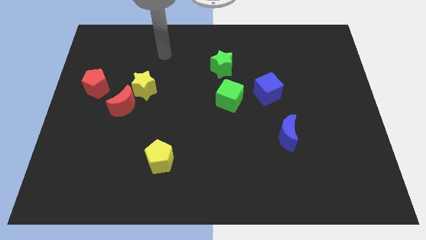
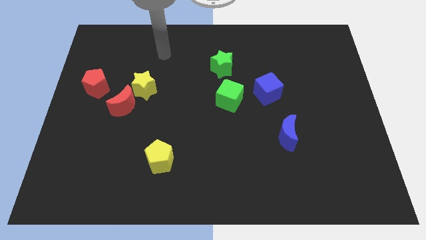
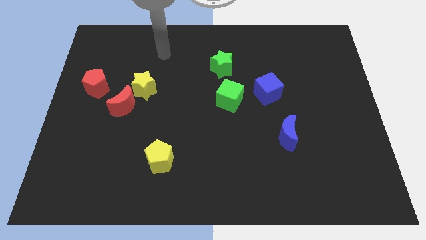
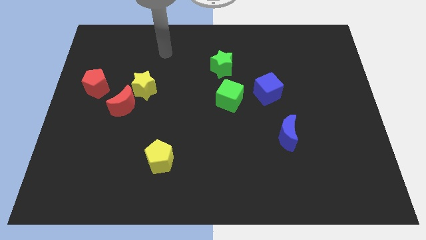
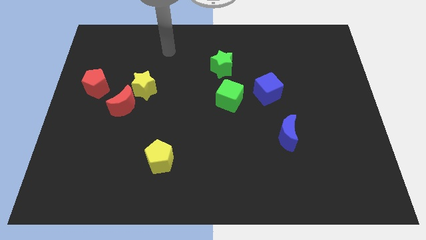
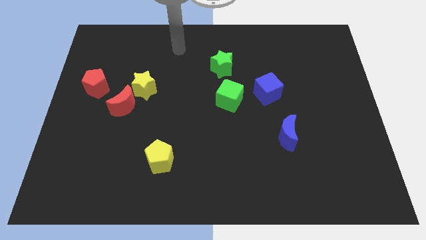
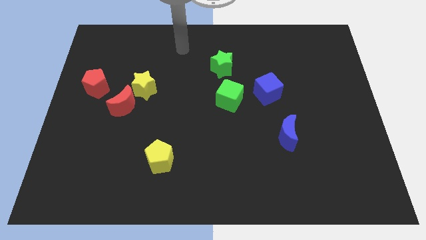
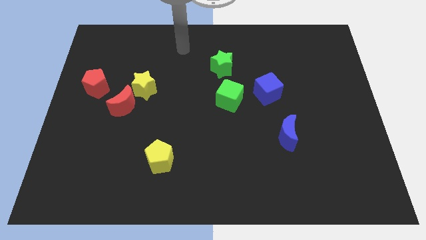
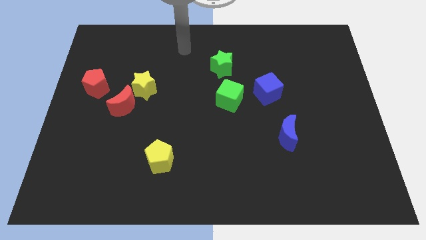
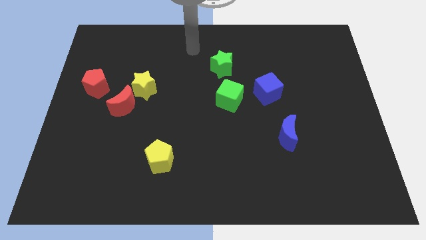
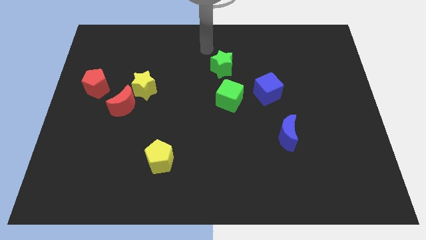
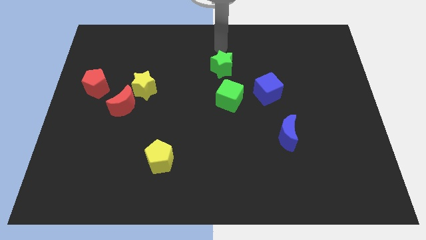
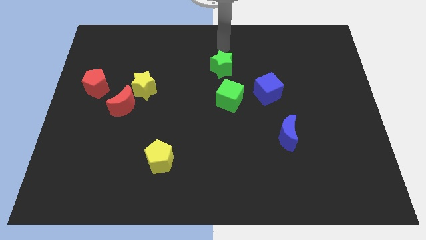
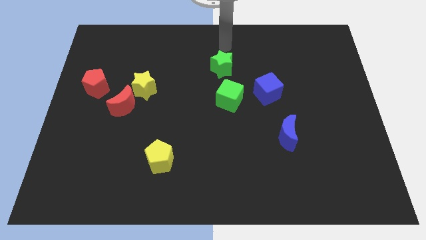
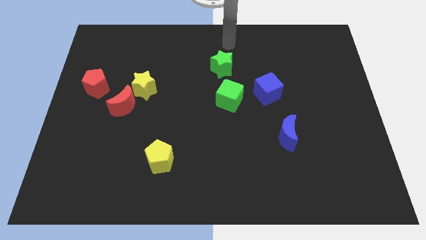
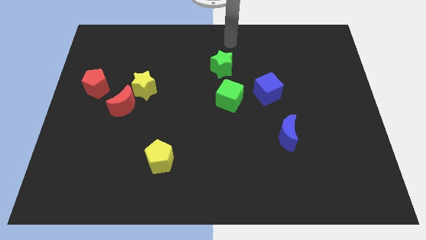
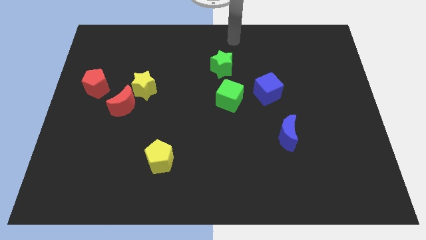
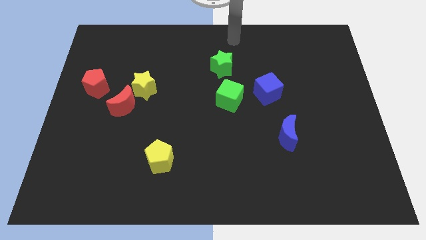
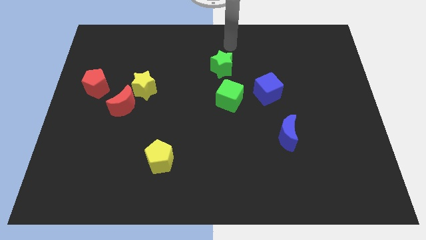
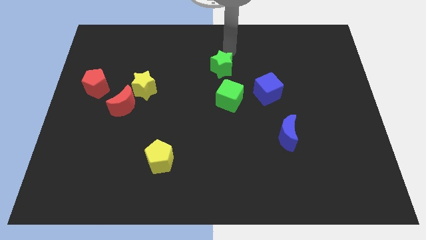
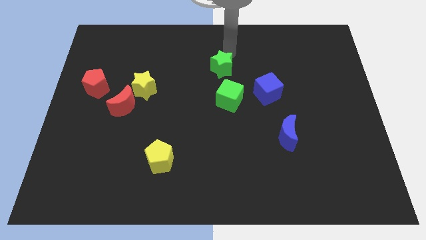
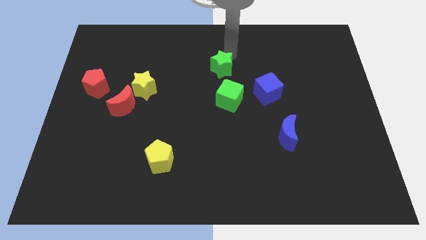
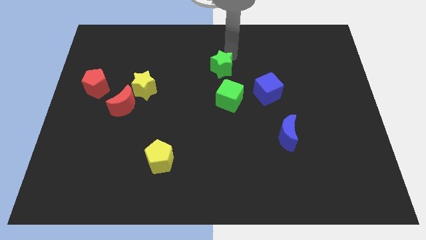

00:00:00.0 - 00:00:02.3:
move your arm close to the green star

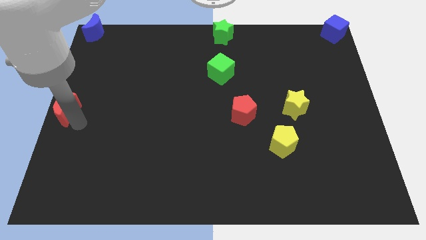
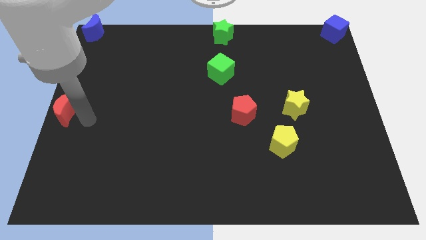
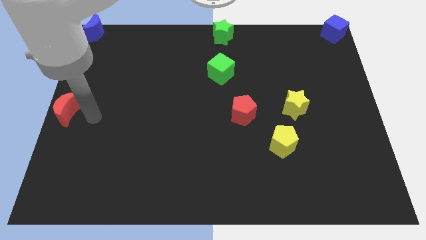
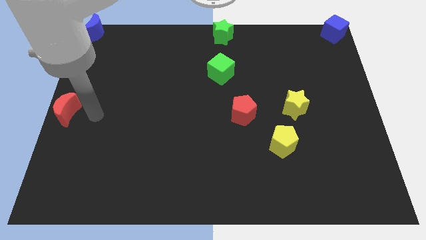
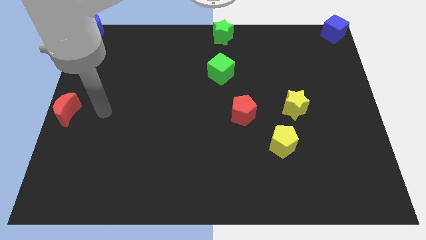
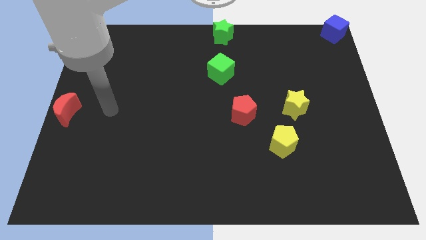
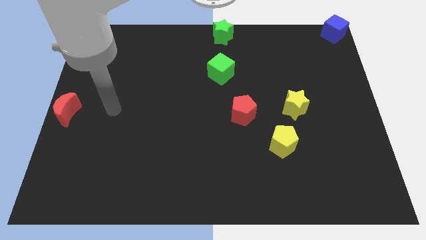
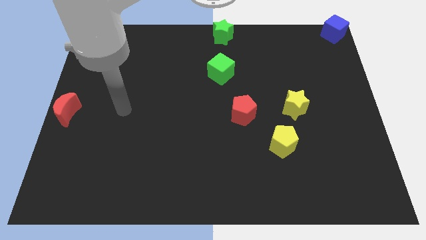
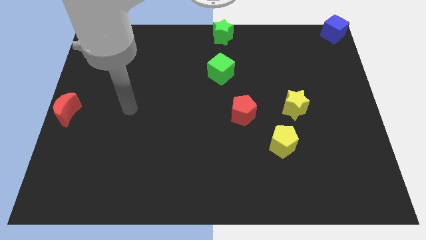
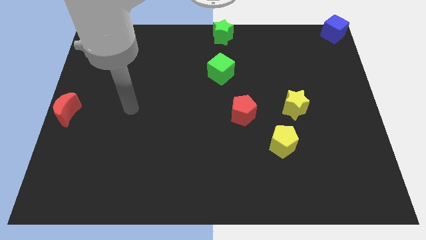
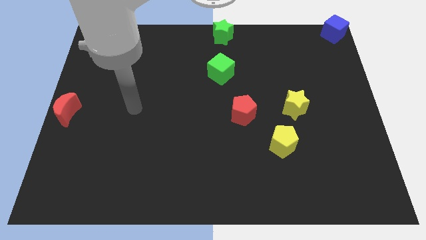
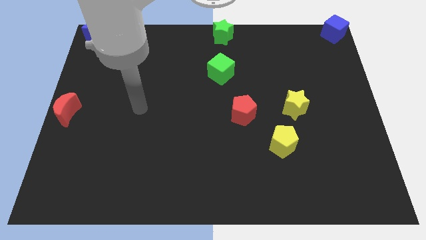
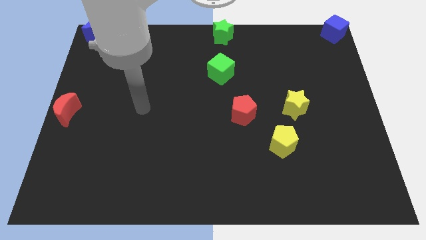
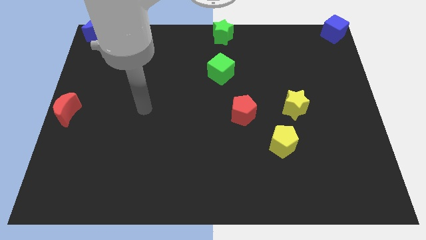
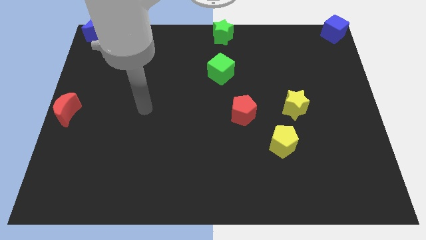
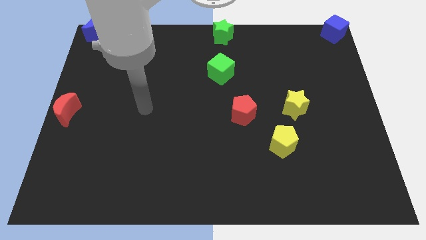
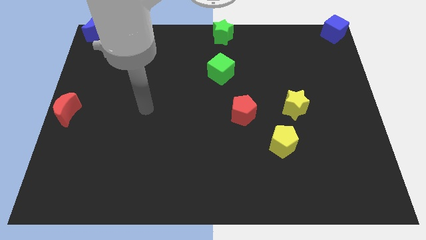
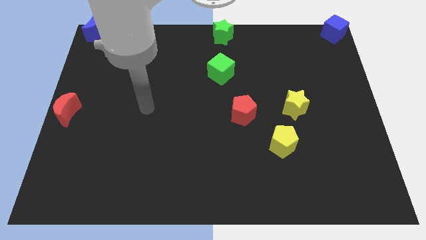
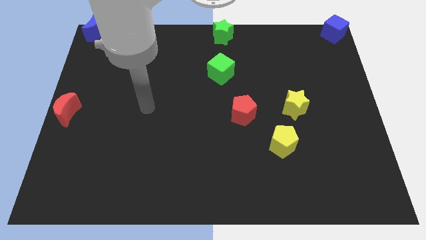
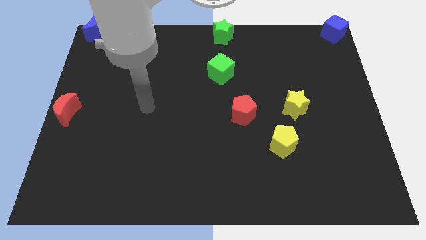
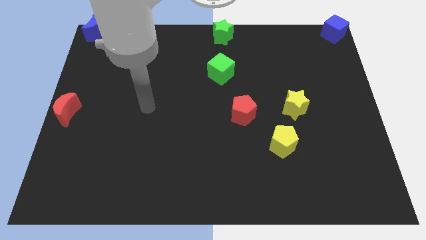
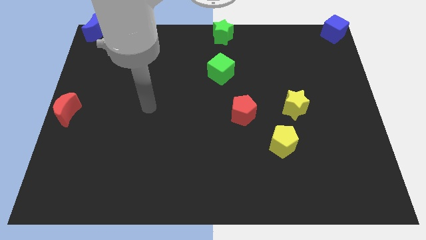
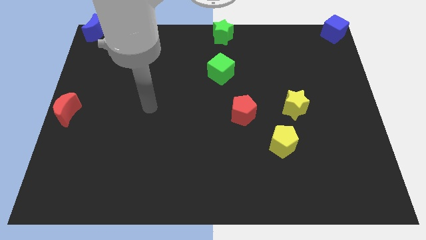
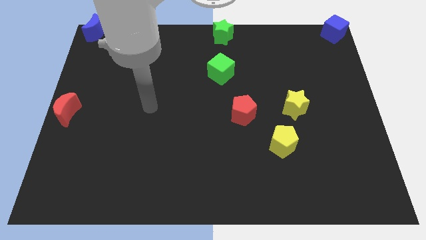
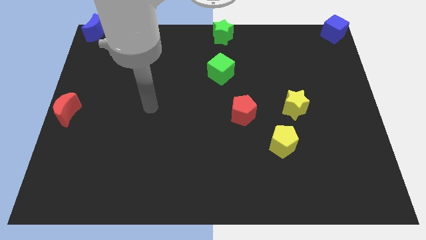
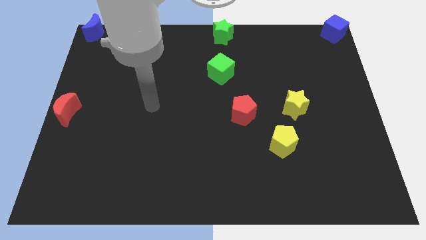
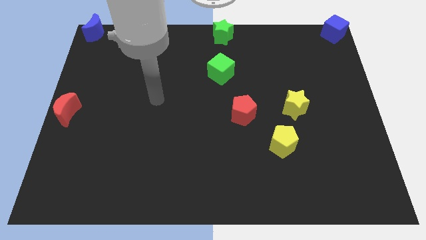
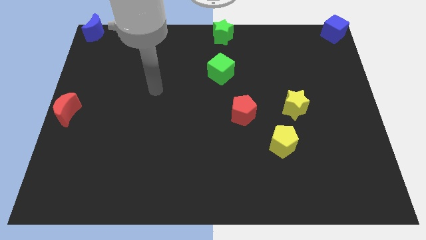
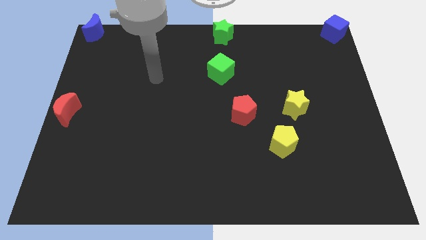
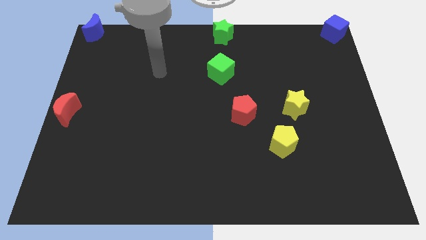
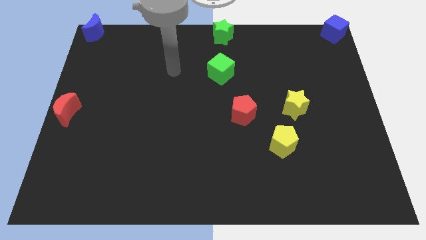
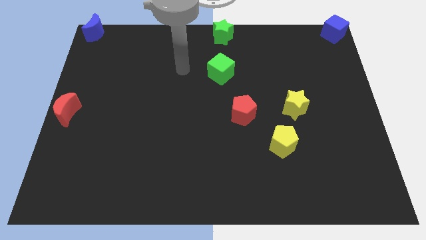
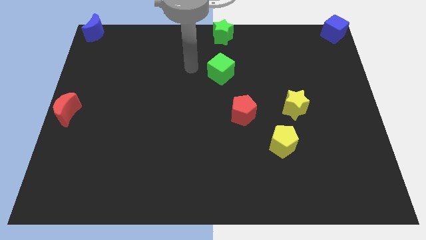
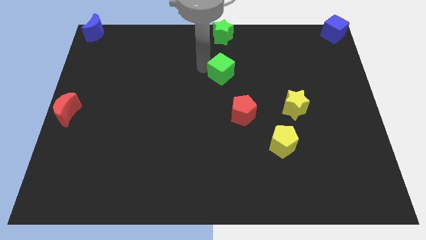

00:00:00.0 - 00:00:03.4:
move your arm towards the green cube

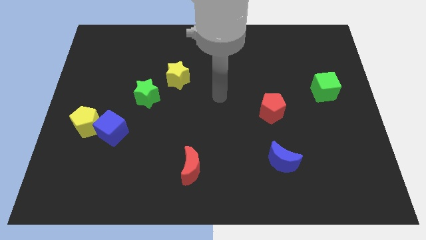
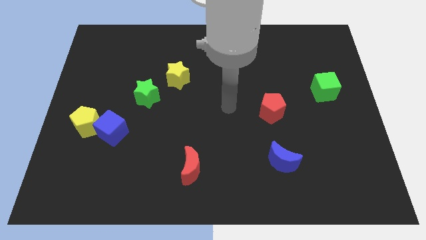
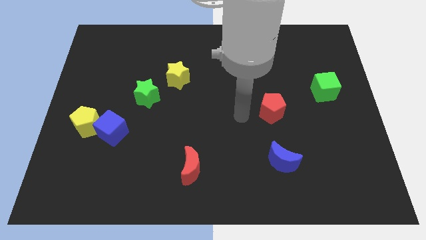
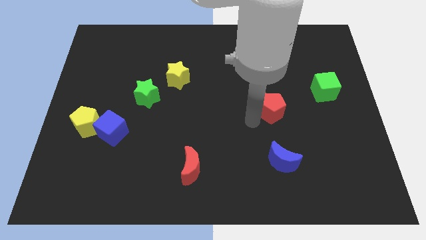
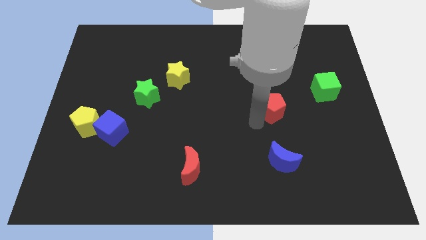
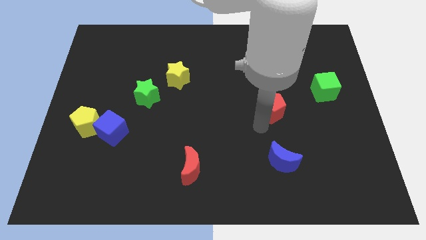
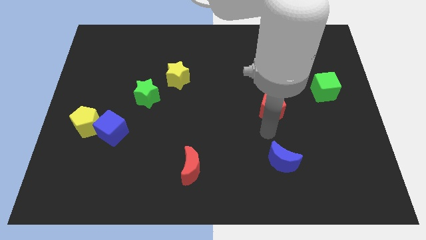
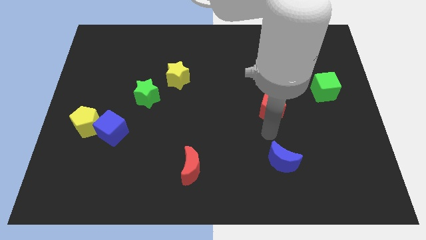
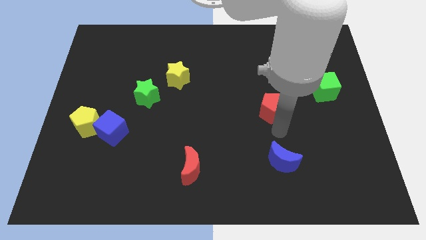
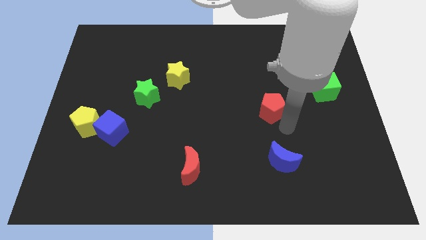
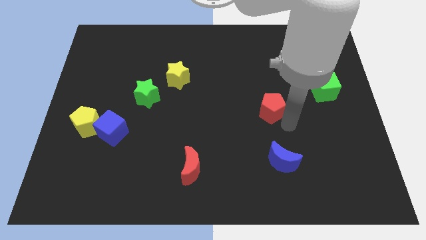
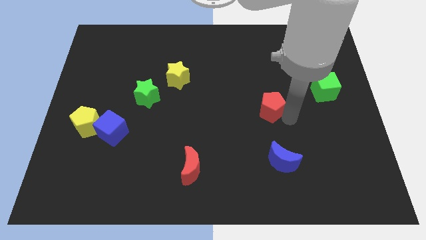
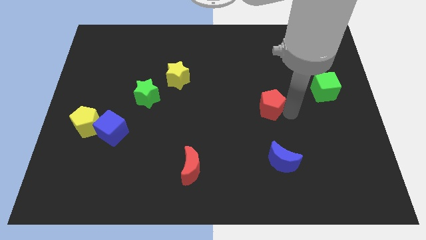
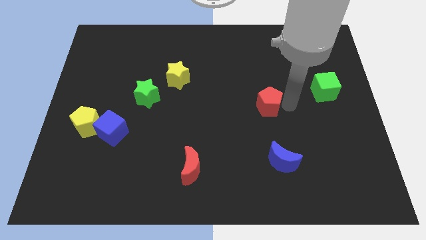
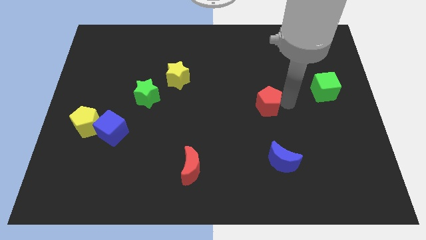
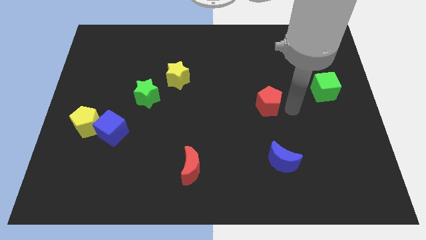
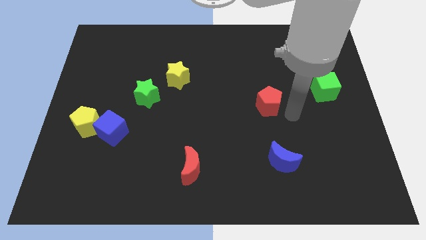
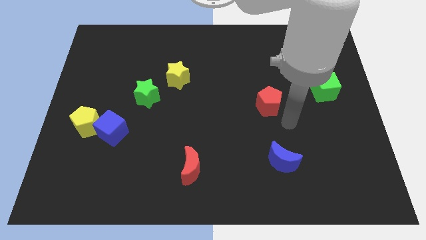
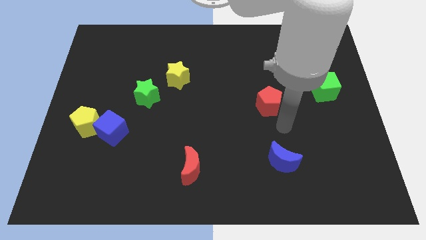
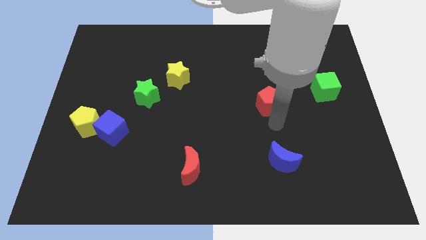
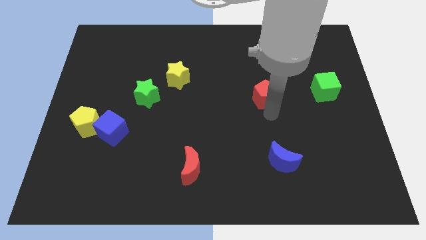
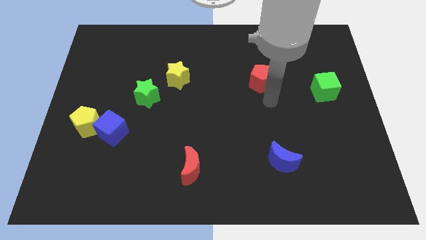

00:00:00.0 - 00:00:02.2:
push the red pentagon to the left of green cube

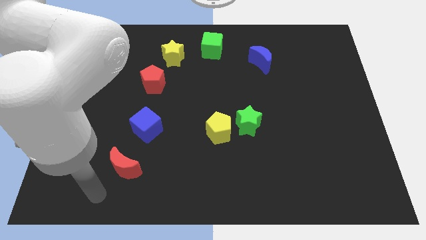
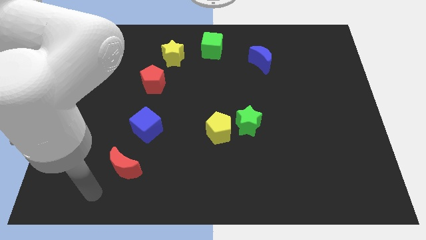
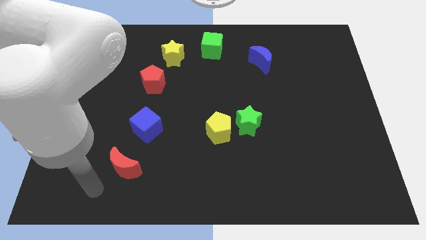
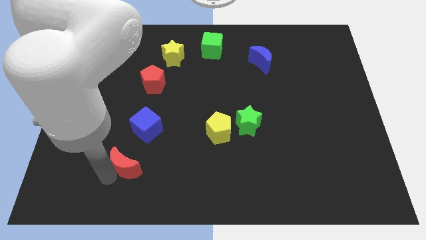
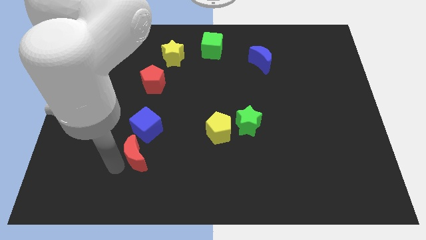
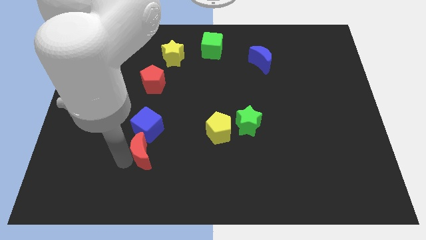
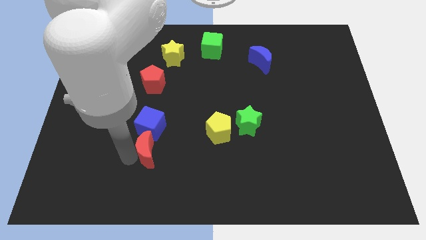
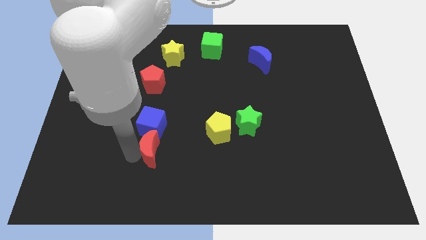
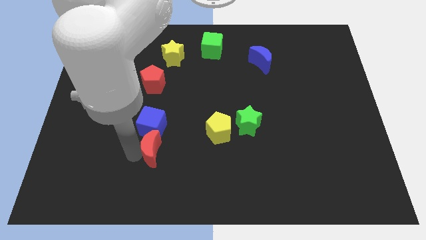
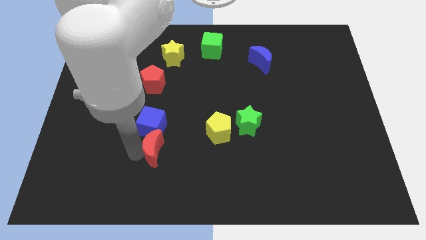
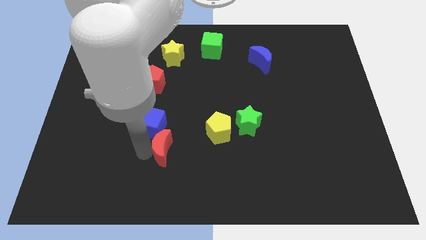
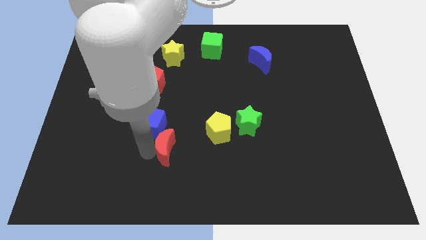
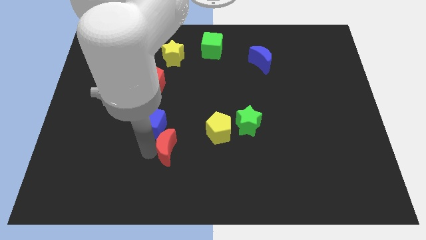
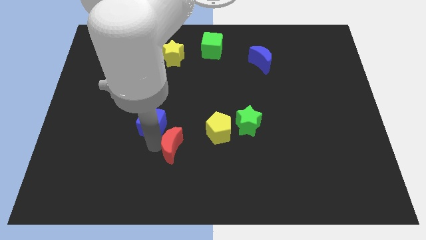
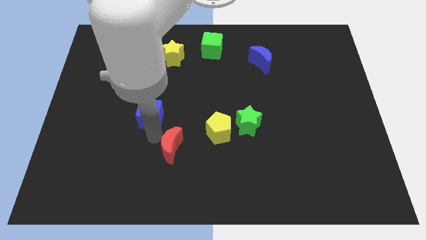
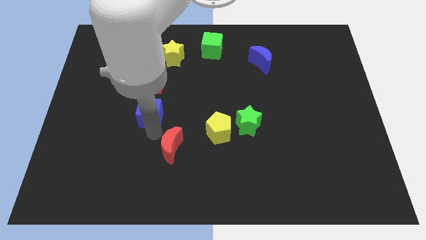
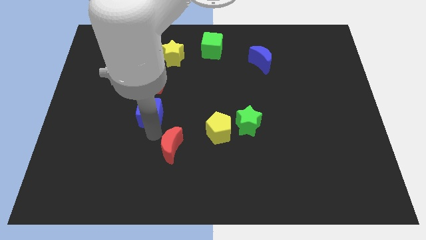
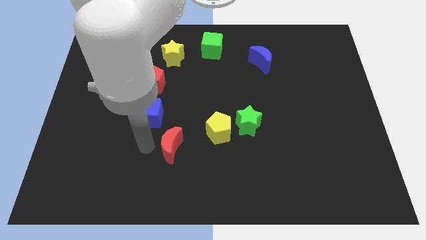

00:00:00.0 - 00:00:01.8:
drag the red moon diagonally bottom right to the blue cube
